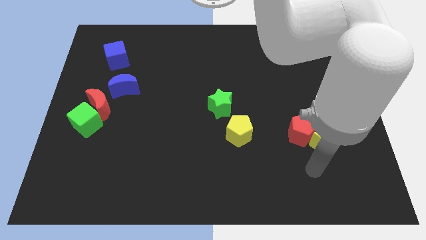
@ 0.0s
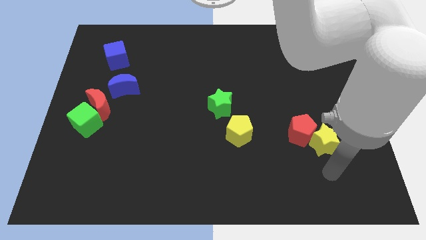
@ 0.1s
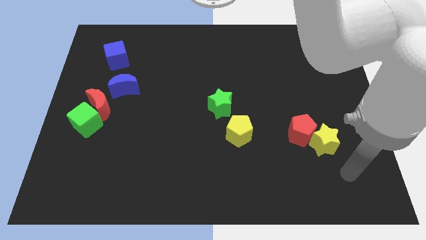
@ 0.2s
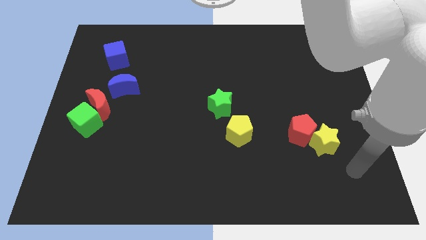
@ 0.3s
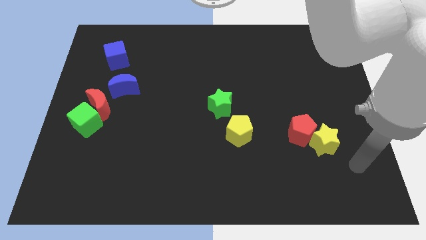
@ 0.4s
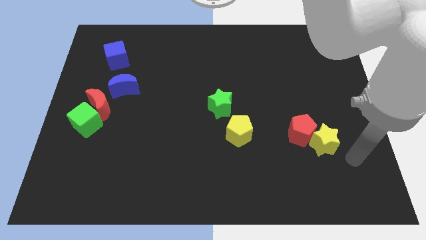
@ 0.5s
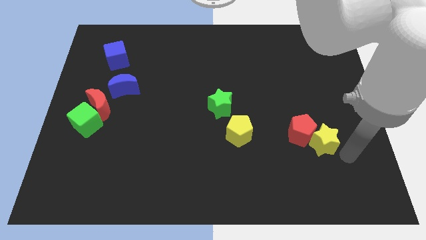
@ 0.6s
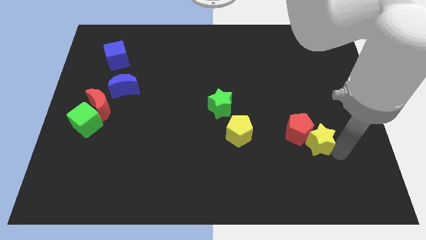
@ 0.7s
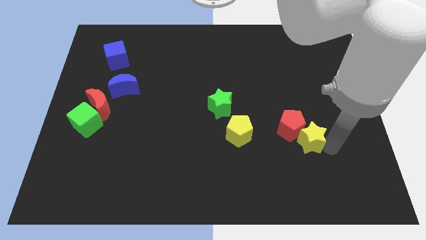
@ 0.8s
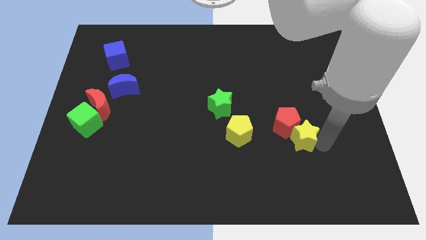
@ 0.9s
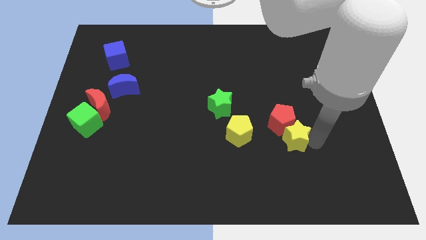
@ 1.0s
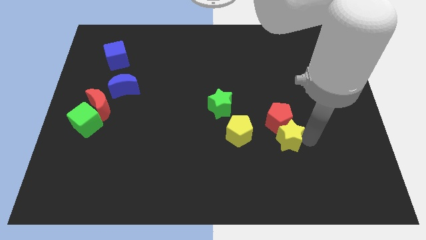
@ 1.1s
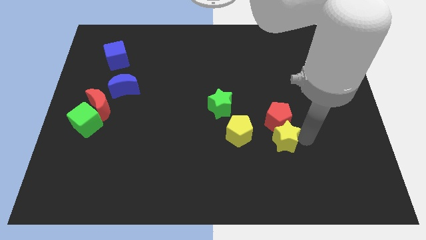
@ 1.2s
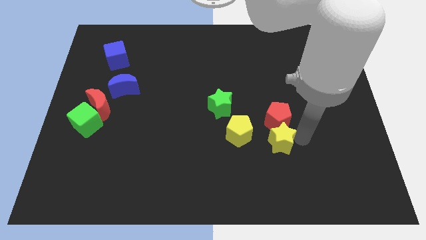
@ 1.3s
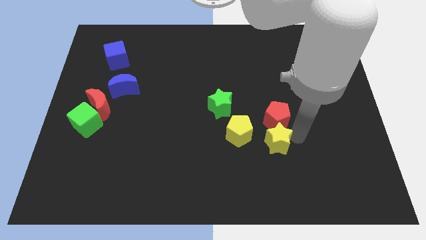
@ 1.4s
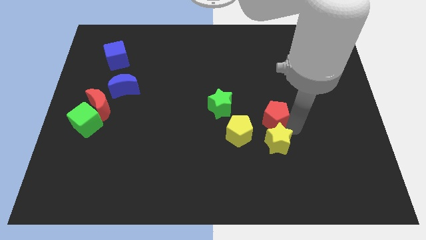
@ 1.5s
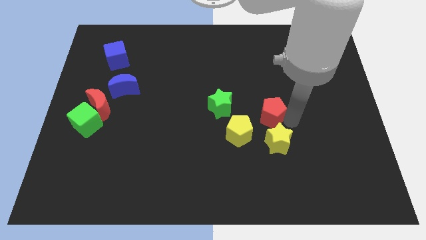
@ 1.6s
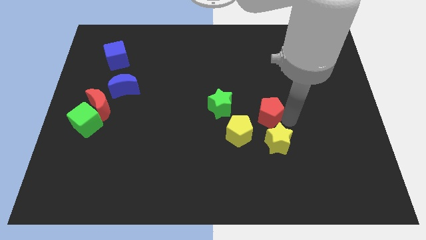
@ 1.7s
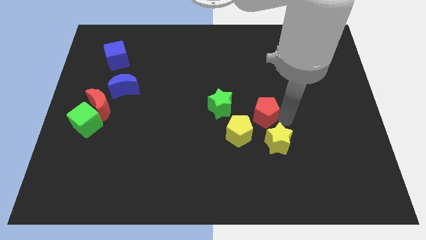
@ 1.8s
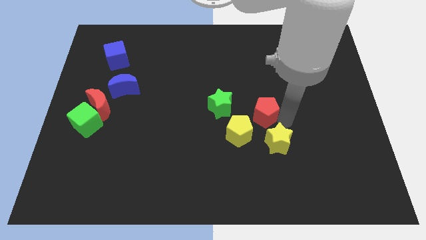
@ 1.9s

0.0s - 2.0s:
push the yellow star diagonally to the red pentagon

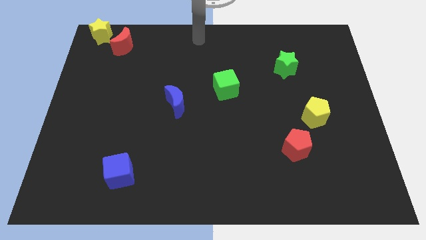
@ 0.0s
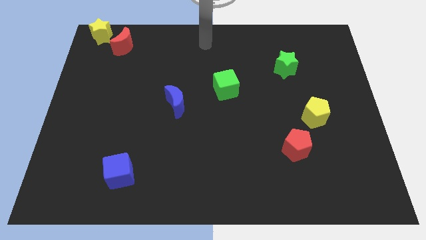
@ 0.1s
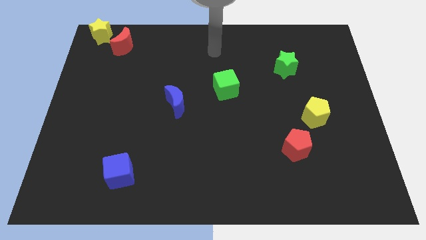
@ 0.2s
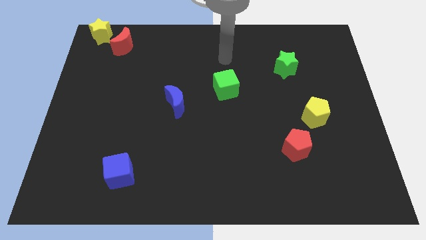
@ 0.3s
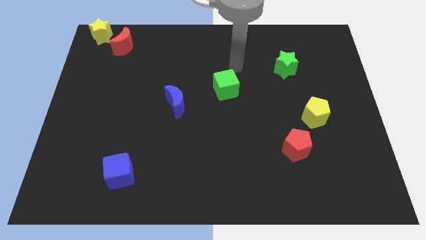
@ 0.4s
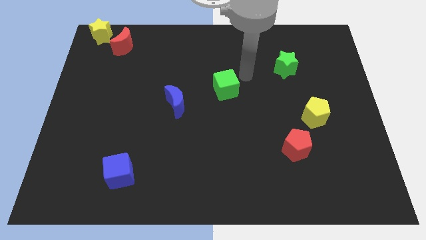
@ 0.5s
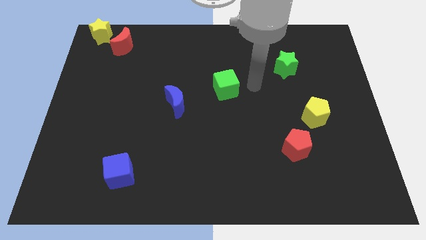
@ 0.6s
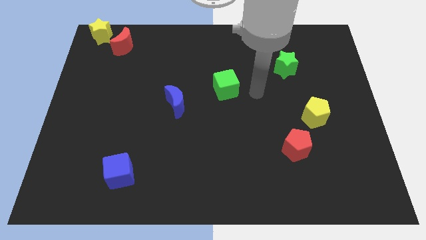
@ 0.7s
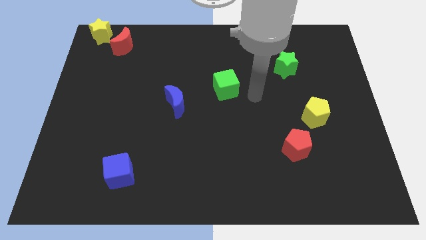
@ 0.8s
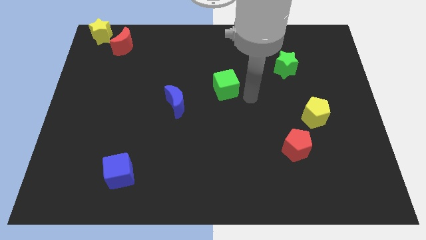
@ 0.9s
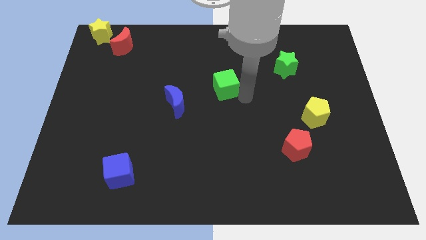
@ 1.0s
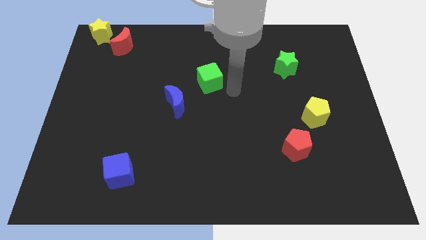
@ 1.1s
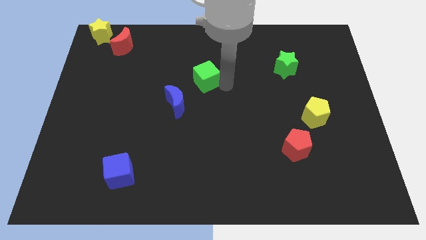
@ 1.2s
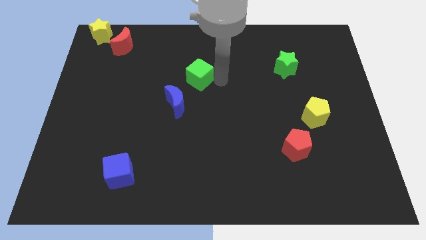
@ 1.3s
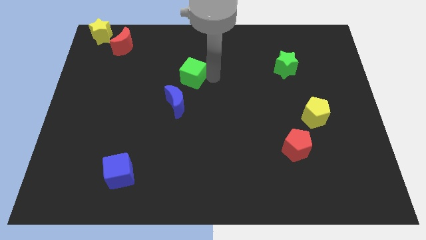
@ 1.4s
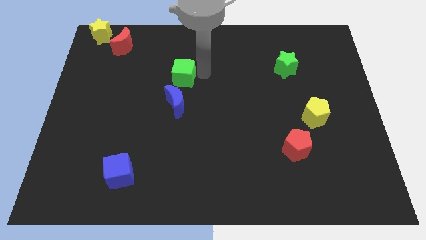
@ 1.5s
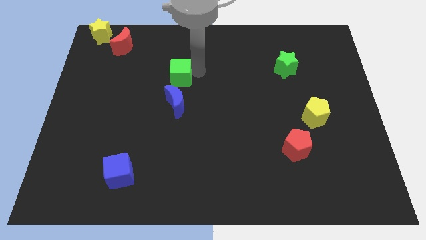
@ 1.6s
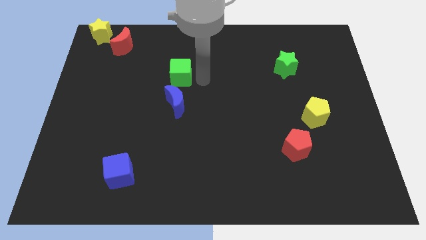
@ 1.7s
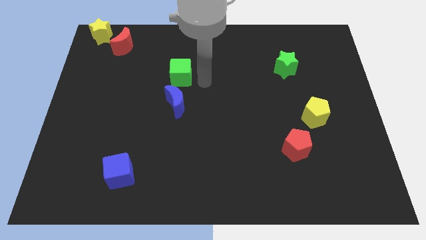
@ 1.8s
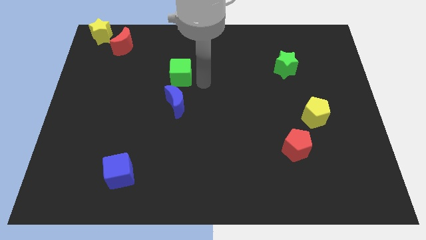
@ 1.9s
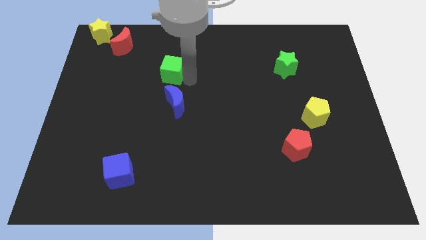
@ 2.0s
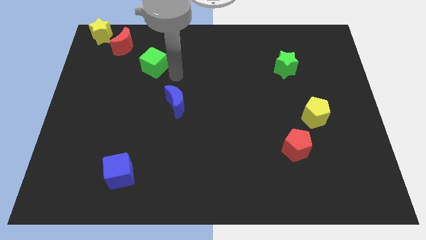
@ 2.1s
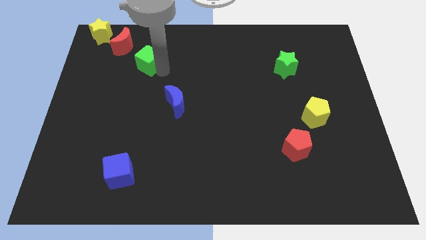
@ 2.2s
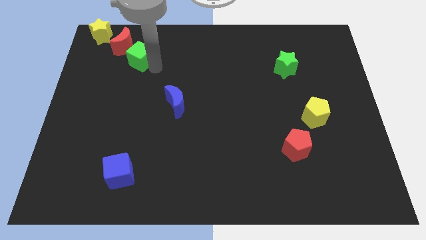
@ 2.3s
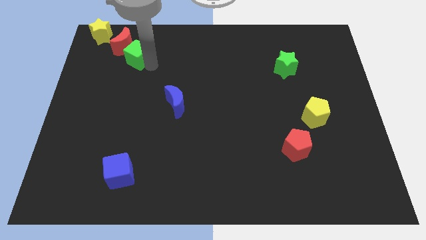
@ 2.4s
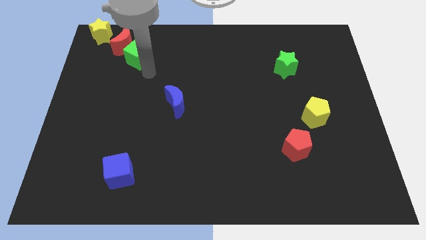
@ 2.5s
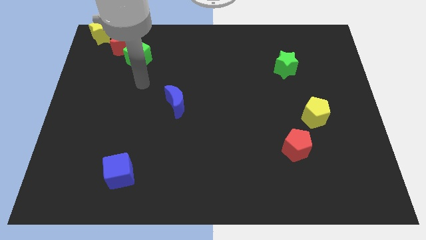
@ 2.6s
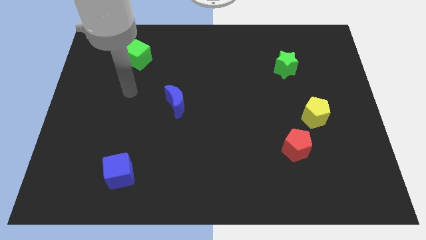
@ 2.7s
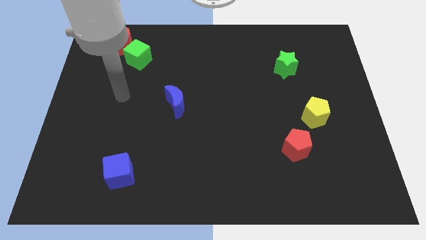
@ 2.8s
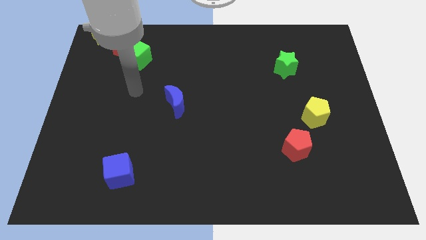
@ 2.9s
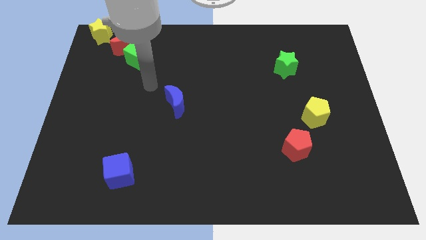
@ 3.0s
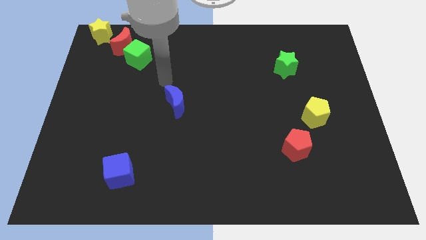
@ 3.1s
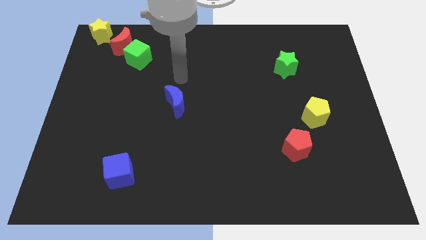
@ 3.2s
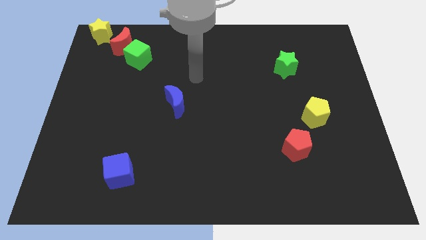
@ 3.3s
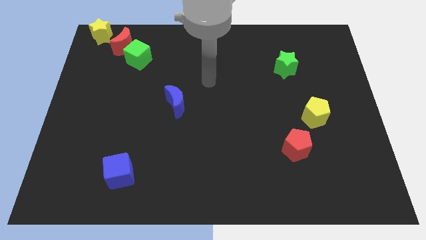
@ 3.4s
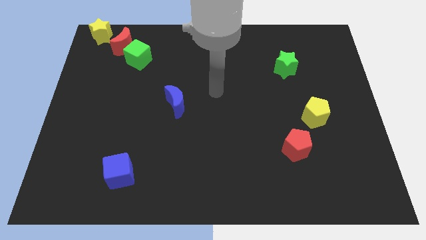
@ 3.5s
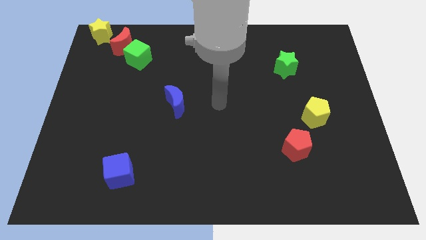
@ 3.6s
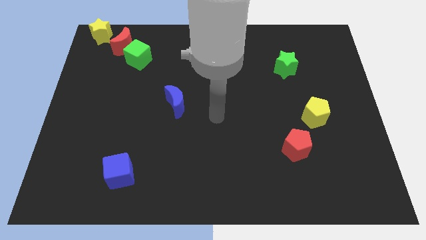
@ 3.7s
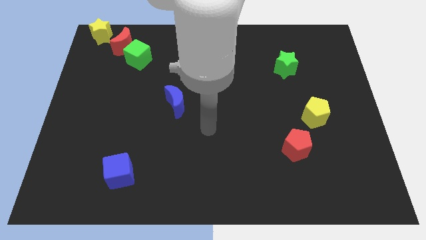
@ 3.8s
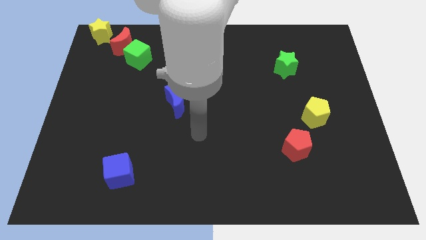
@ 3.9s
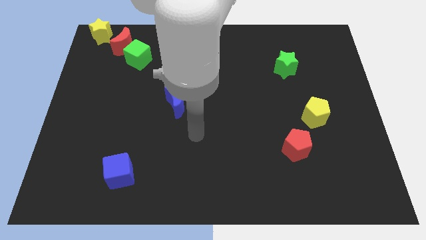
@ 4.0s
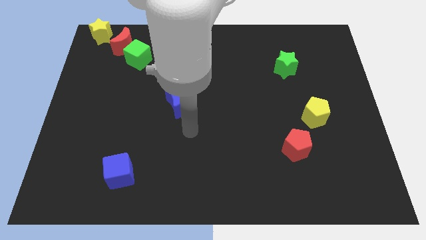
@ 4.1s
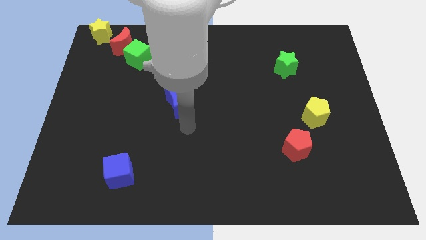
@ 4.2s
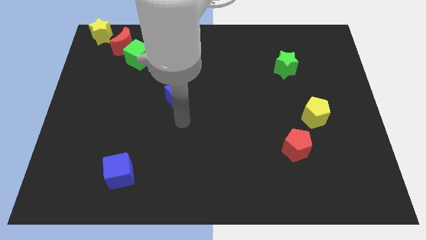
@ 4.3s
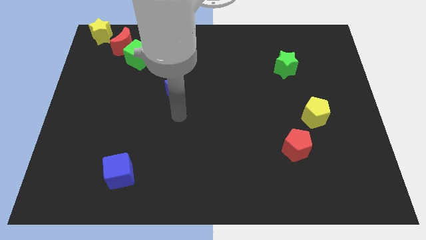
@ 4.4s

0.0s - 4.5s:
place the green cube near the red crescent

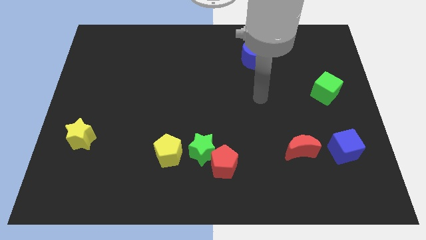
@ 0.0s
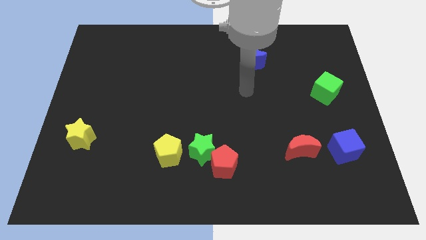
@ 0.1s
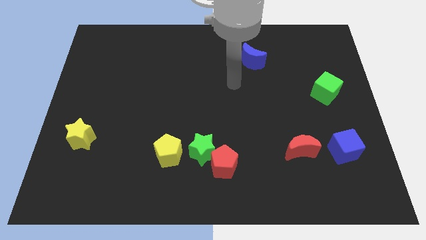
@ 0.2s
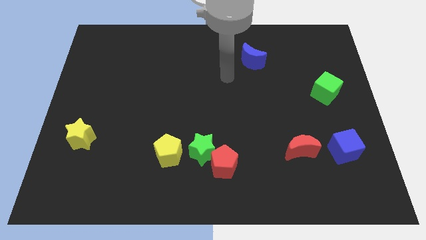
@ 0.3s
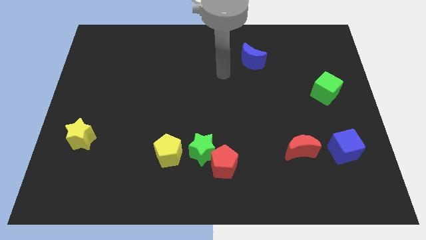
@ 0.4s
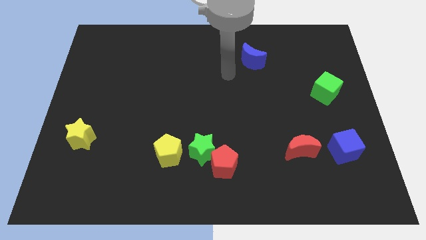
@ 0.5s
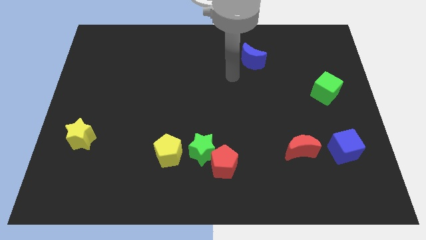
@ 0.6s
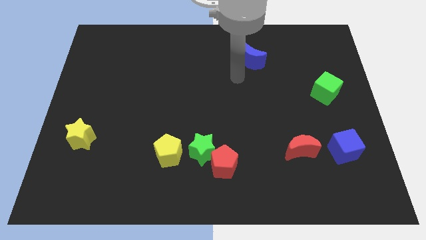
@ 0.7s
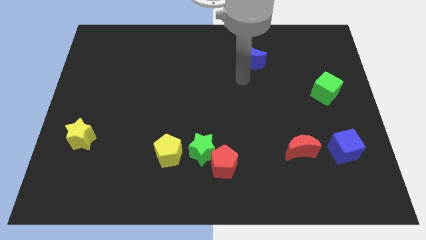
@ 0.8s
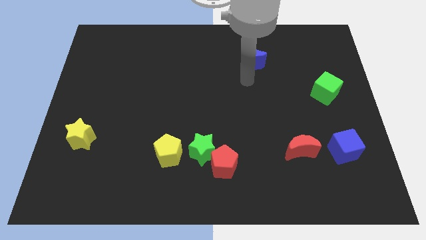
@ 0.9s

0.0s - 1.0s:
move your arm near the blue moon

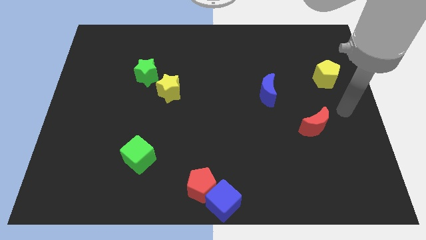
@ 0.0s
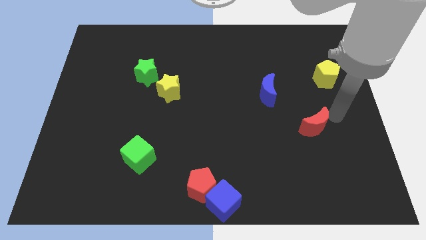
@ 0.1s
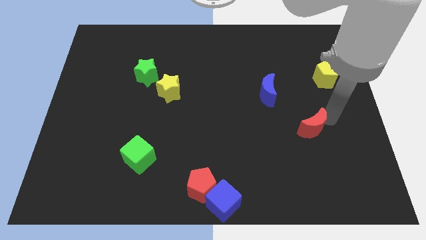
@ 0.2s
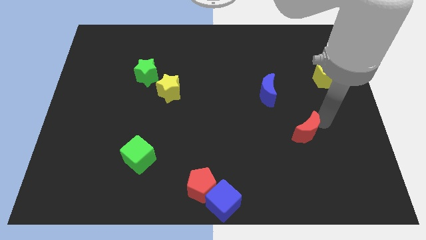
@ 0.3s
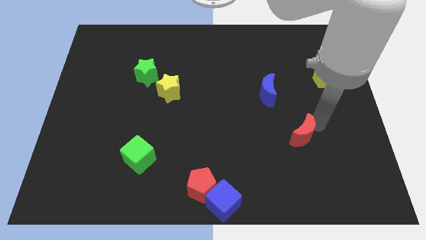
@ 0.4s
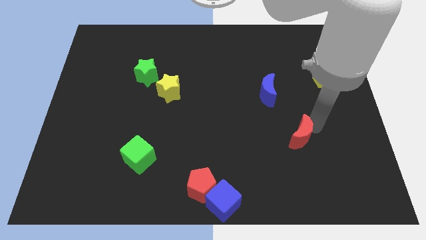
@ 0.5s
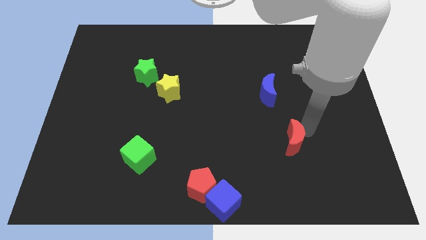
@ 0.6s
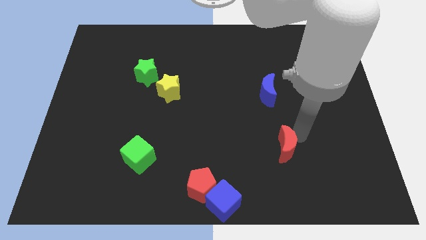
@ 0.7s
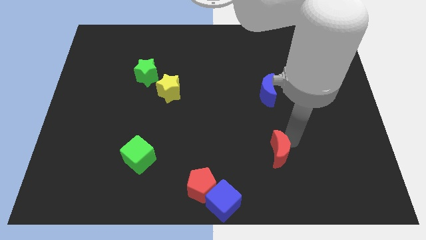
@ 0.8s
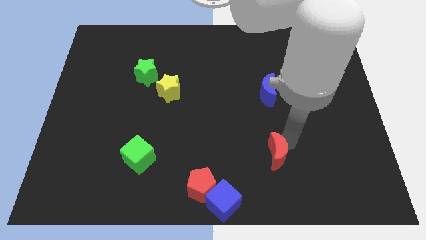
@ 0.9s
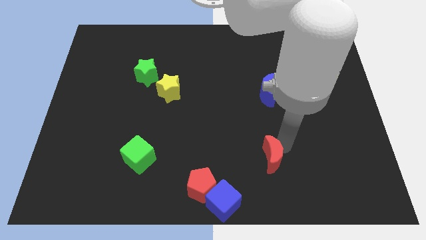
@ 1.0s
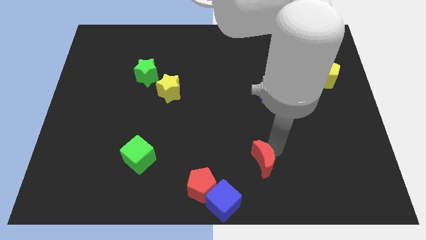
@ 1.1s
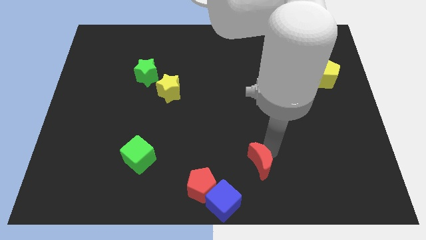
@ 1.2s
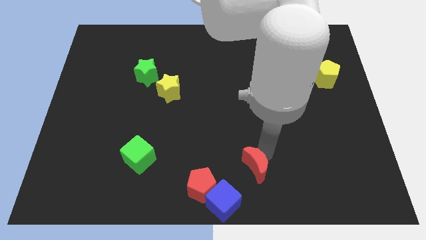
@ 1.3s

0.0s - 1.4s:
push the red moon towards to the blue cube

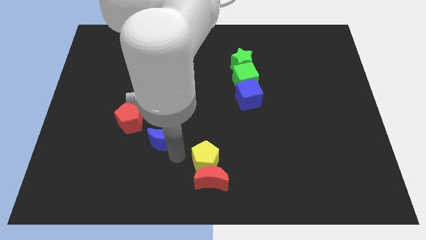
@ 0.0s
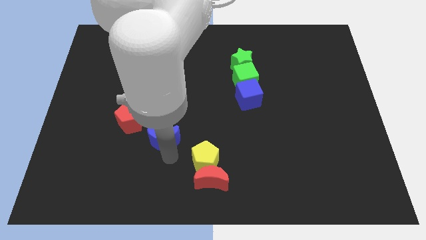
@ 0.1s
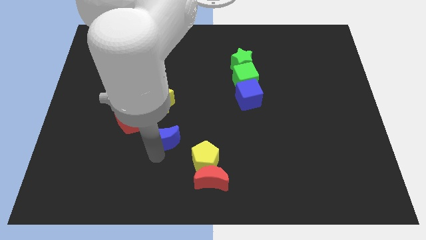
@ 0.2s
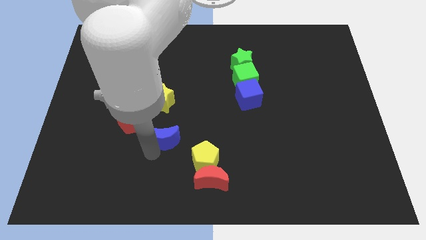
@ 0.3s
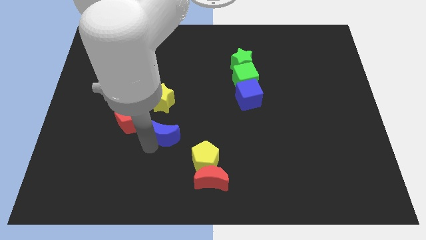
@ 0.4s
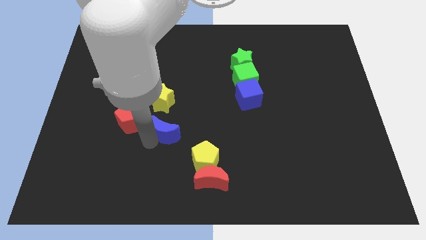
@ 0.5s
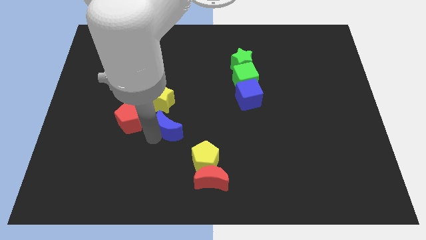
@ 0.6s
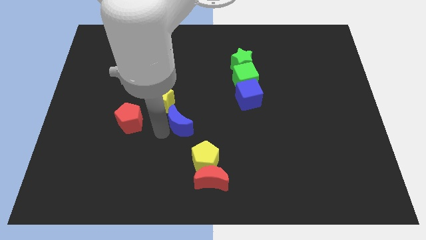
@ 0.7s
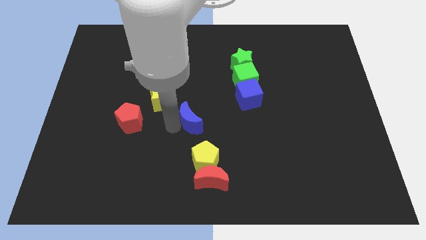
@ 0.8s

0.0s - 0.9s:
move the blue moon slightly to the right
